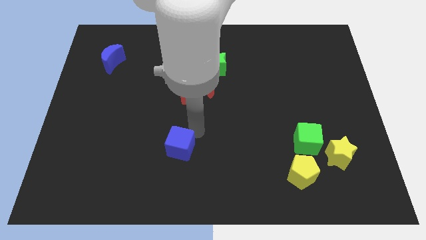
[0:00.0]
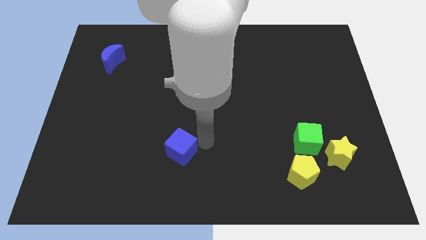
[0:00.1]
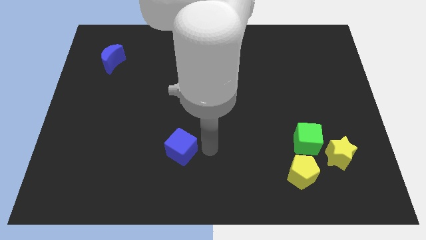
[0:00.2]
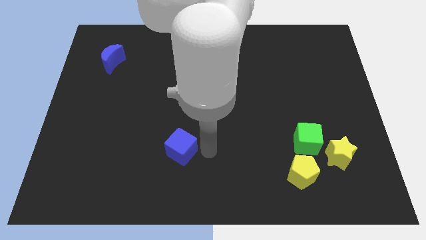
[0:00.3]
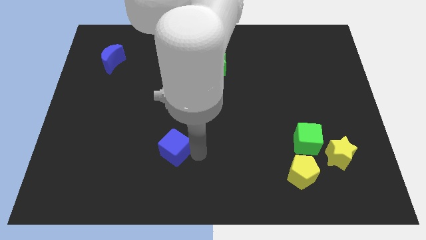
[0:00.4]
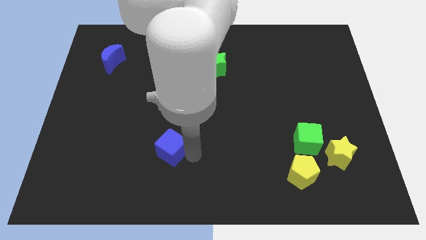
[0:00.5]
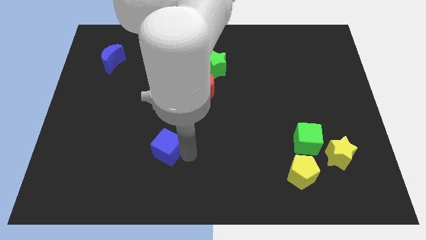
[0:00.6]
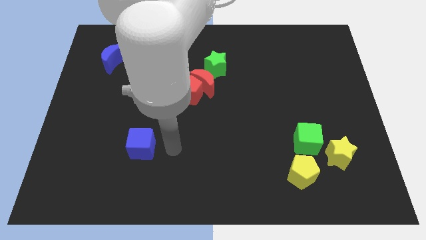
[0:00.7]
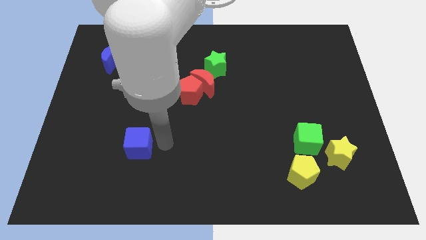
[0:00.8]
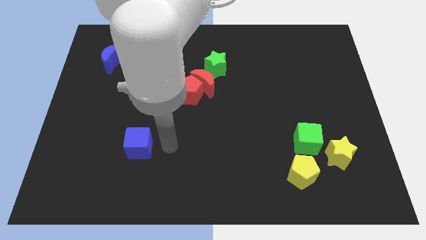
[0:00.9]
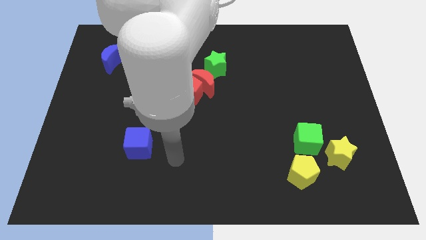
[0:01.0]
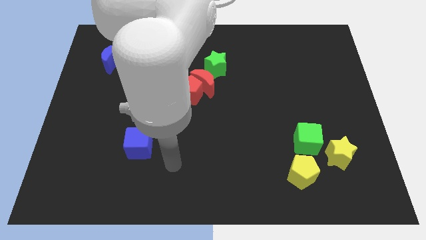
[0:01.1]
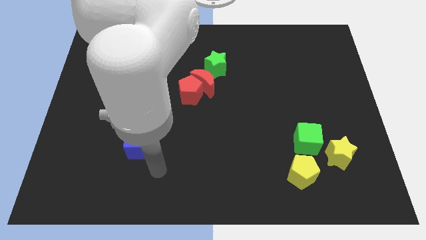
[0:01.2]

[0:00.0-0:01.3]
slide the blue cube slightly towards left

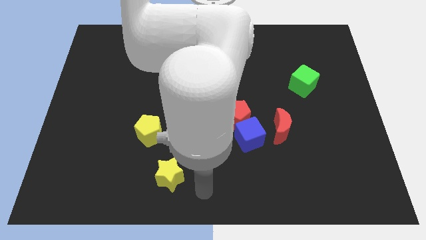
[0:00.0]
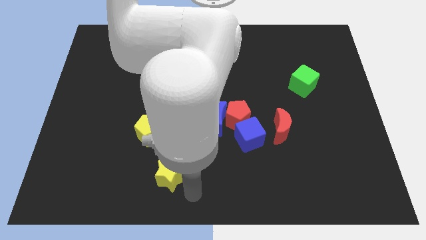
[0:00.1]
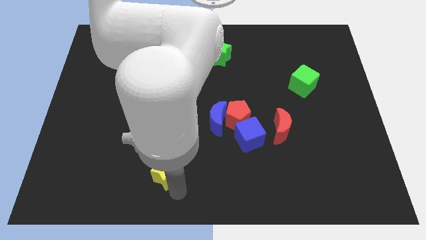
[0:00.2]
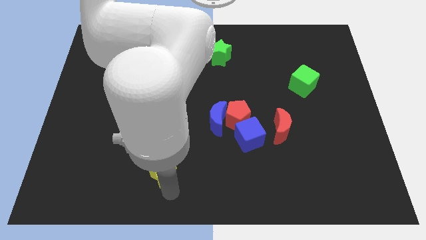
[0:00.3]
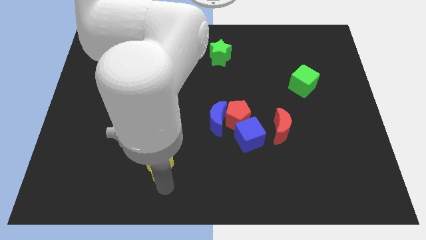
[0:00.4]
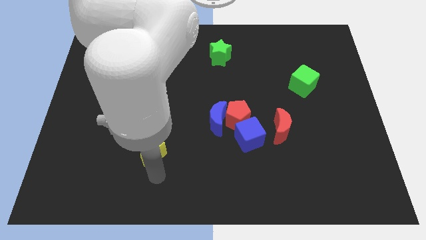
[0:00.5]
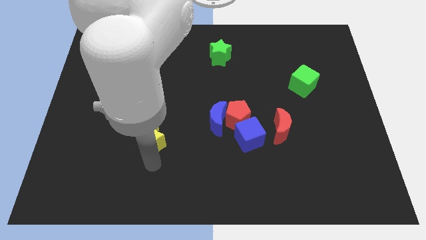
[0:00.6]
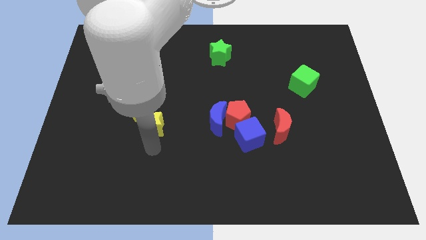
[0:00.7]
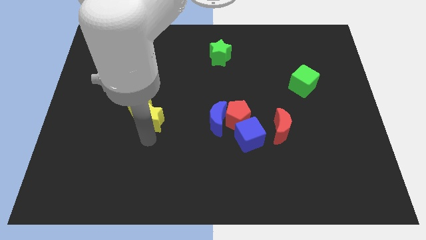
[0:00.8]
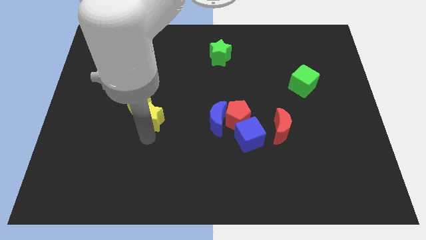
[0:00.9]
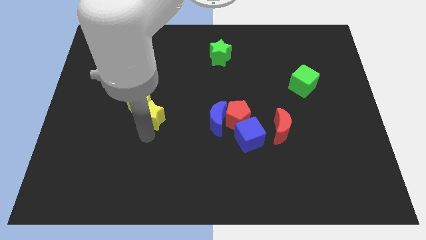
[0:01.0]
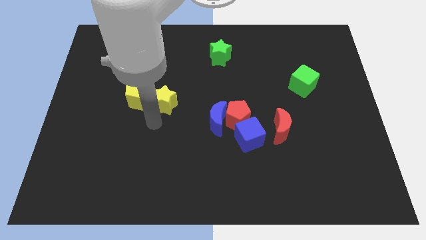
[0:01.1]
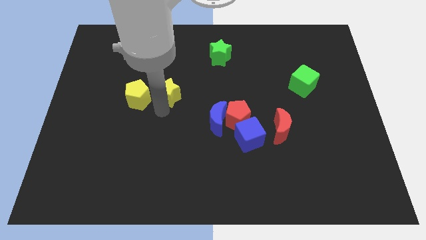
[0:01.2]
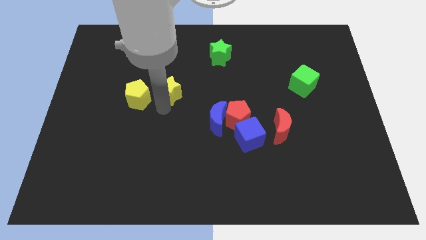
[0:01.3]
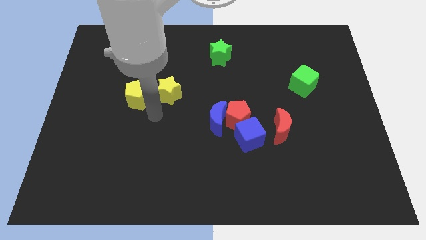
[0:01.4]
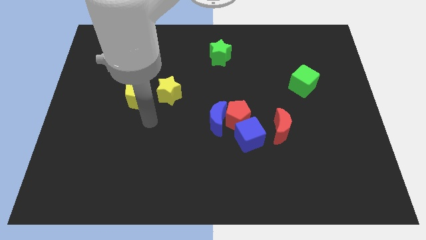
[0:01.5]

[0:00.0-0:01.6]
place the yellow star to the right of yellow pentagon

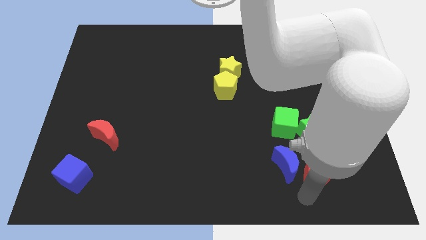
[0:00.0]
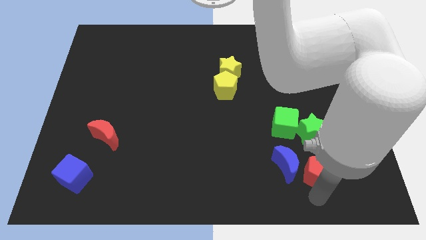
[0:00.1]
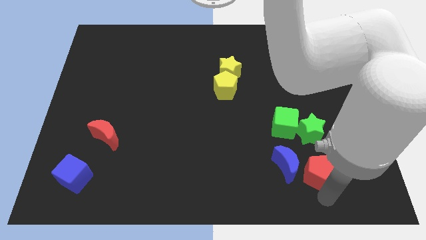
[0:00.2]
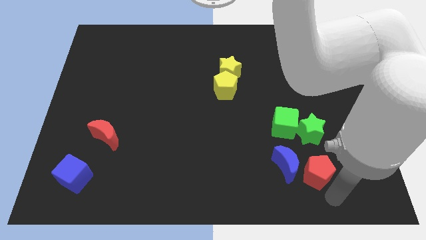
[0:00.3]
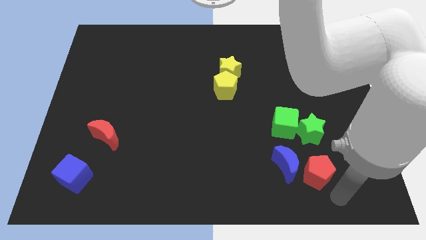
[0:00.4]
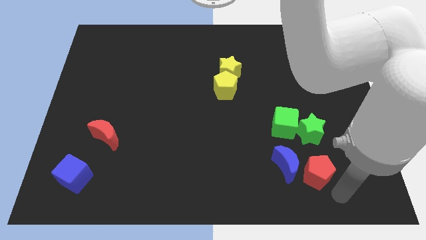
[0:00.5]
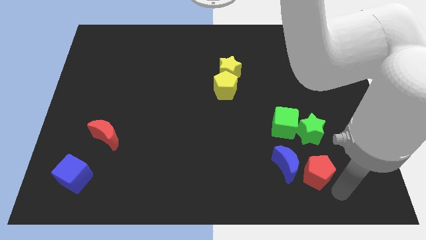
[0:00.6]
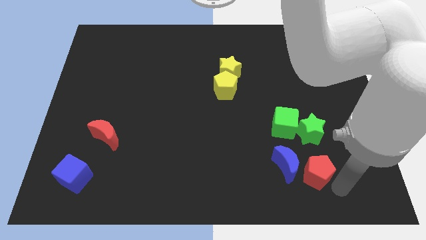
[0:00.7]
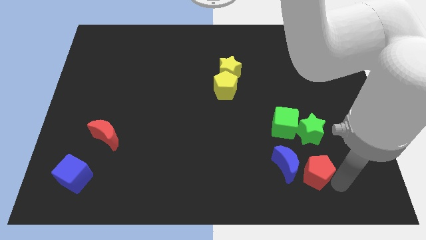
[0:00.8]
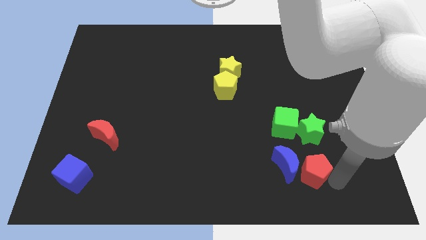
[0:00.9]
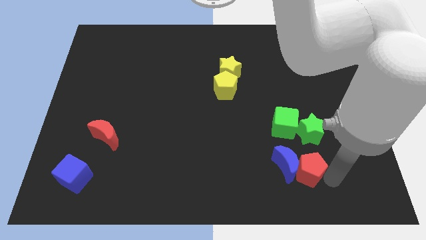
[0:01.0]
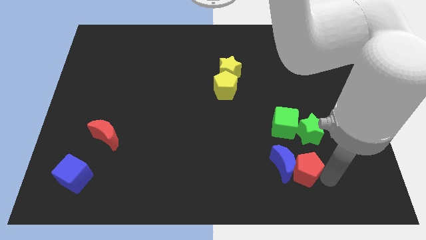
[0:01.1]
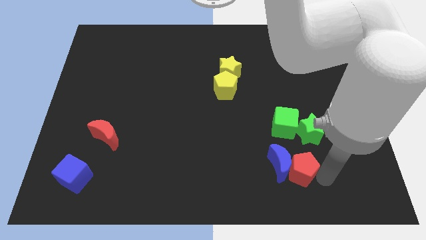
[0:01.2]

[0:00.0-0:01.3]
put the red pentagon into the blue moon

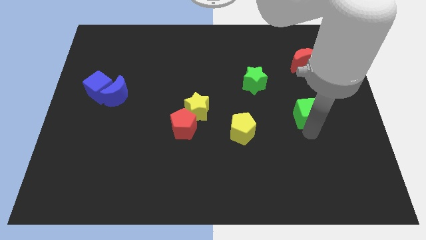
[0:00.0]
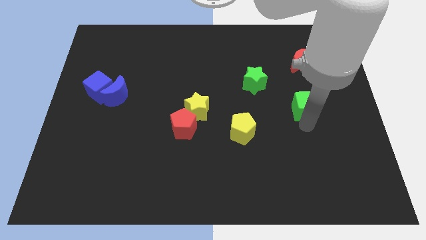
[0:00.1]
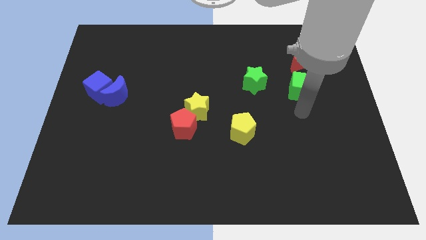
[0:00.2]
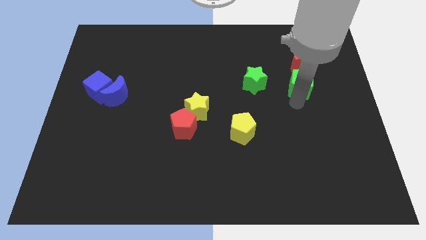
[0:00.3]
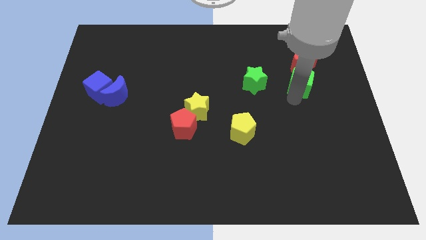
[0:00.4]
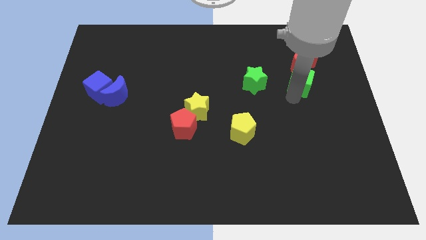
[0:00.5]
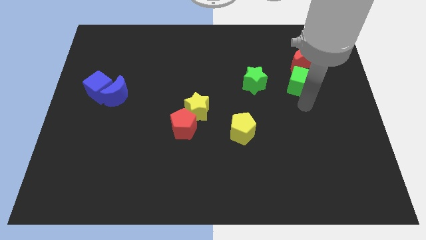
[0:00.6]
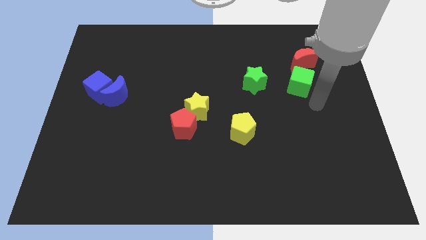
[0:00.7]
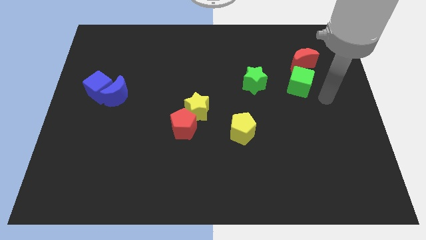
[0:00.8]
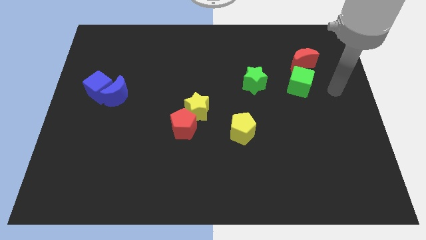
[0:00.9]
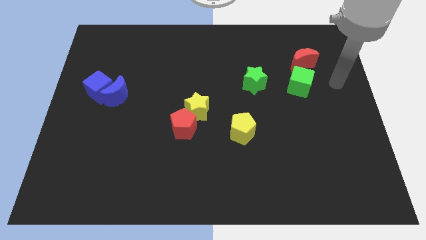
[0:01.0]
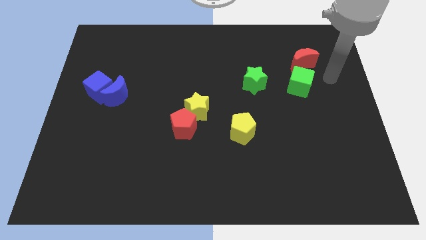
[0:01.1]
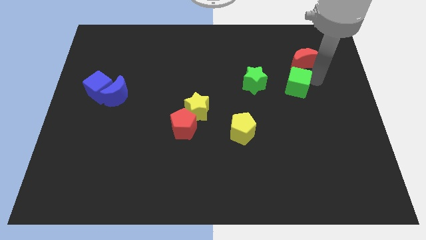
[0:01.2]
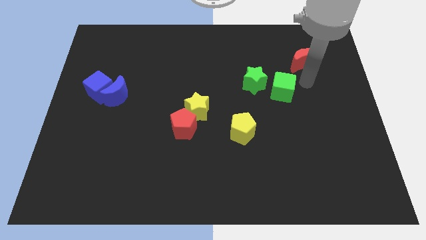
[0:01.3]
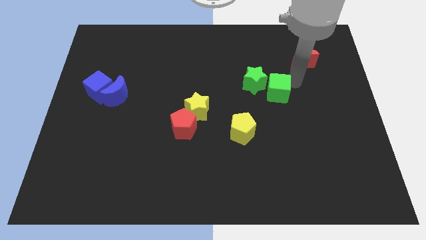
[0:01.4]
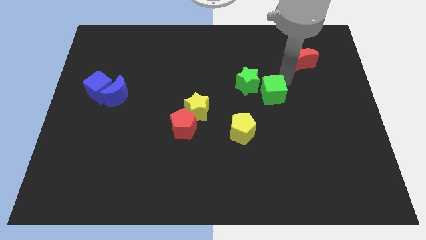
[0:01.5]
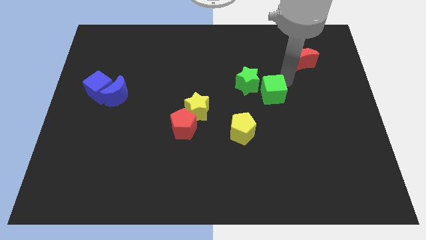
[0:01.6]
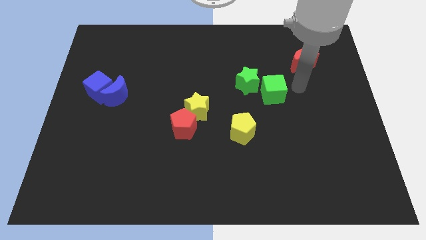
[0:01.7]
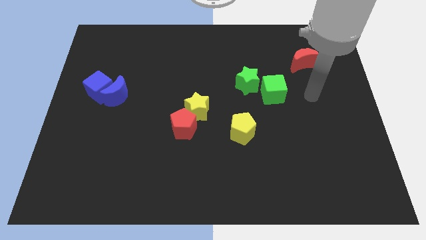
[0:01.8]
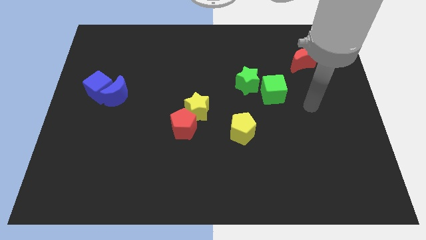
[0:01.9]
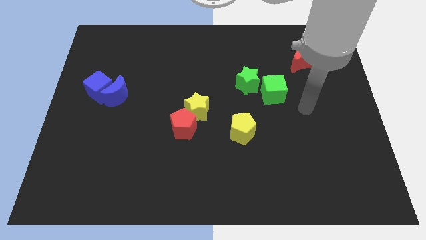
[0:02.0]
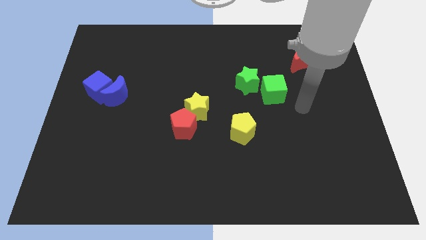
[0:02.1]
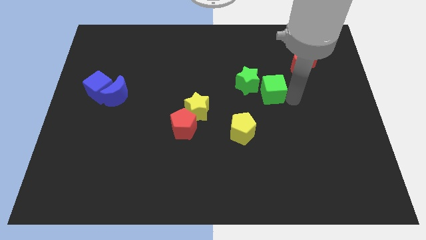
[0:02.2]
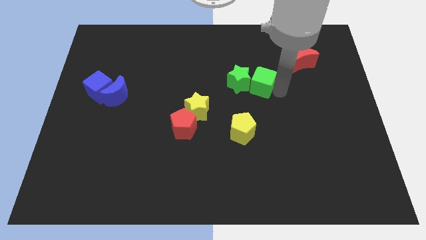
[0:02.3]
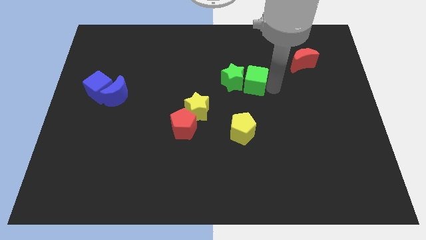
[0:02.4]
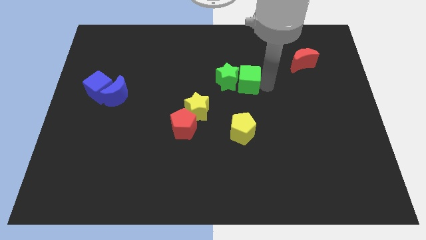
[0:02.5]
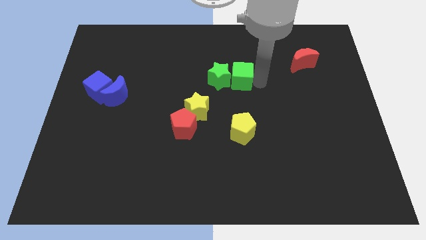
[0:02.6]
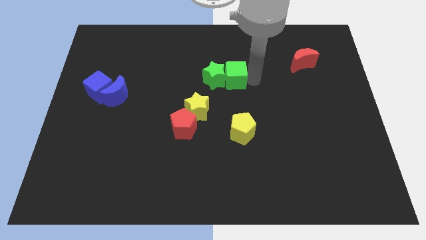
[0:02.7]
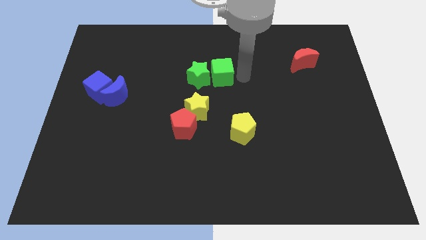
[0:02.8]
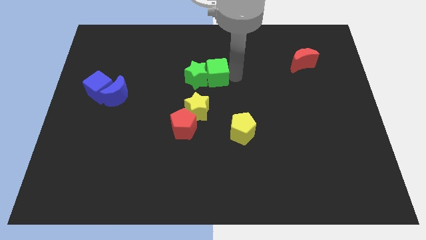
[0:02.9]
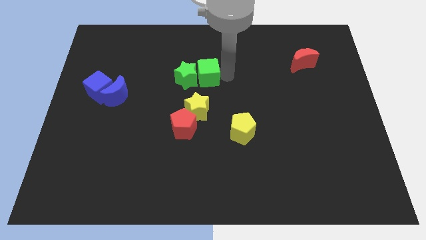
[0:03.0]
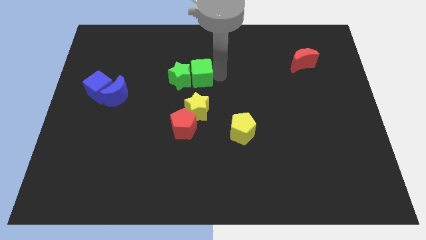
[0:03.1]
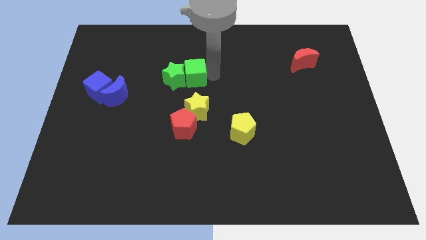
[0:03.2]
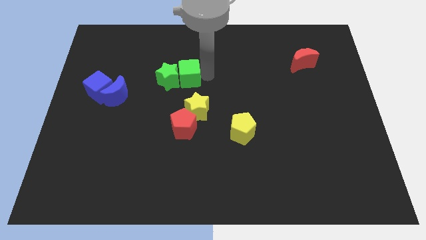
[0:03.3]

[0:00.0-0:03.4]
push green cube to the top of yellow star

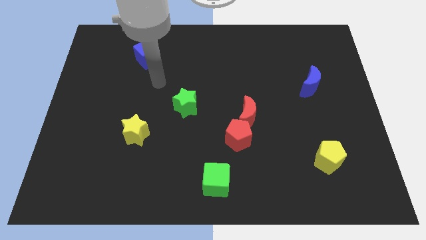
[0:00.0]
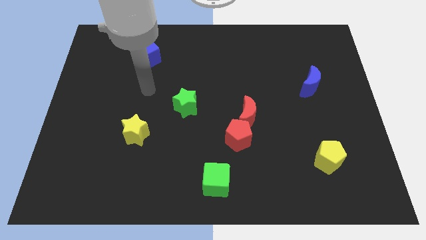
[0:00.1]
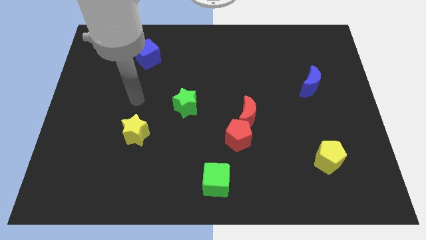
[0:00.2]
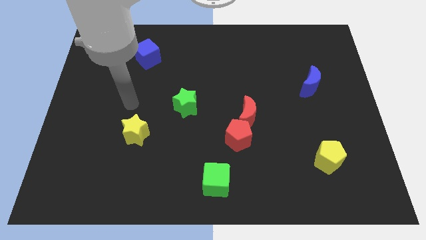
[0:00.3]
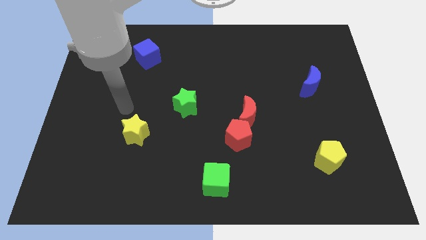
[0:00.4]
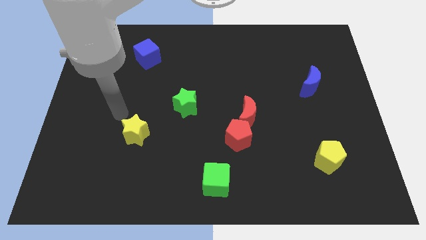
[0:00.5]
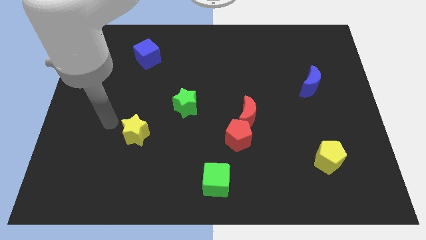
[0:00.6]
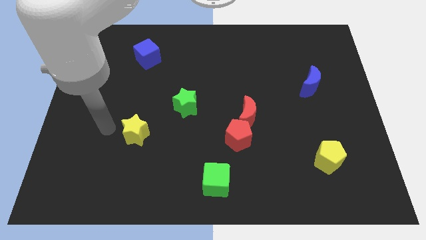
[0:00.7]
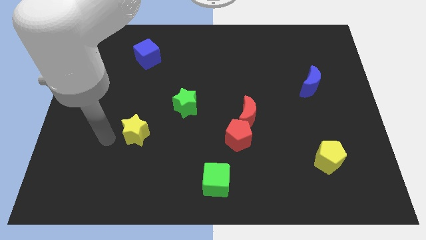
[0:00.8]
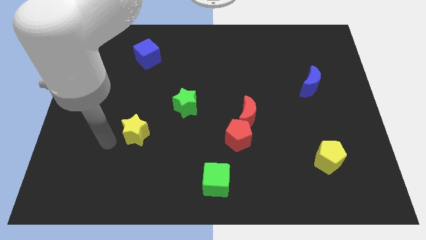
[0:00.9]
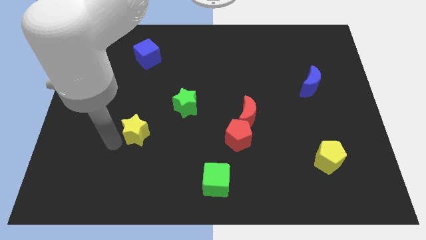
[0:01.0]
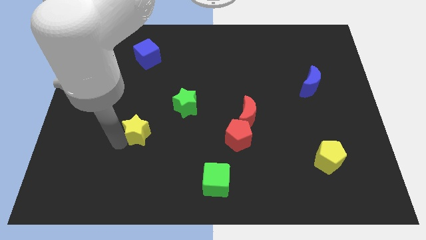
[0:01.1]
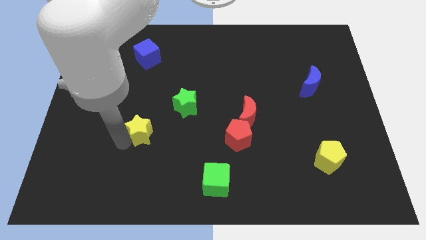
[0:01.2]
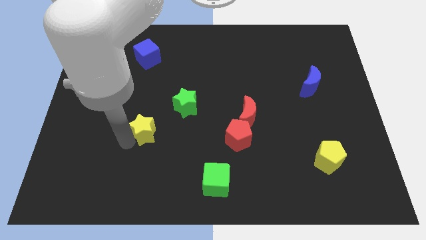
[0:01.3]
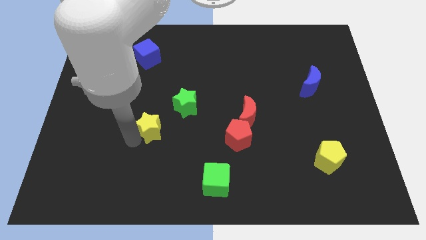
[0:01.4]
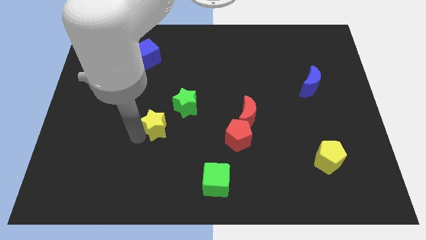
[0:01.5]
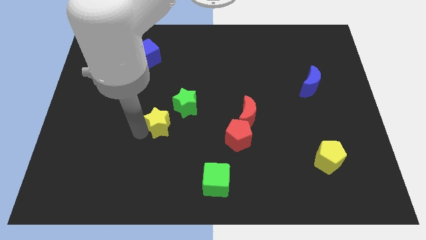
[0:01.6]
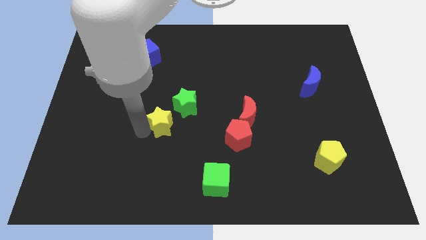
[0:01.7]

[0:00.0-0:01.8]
move the yellow star to the bottom left of the green star
